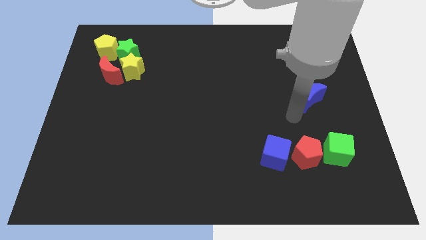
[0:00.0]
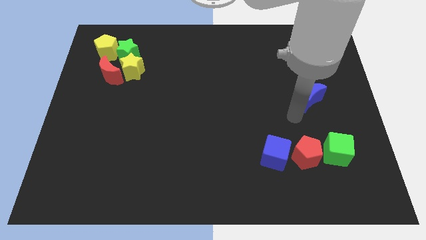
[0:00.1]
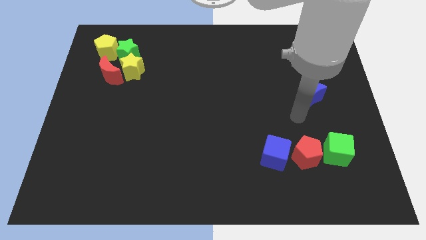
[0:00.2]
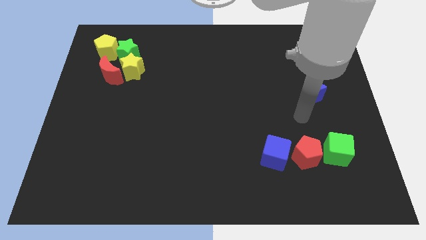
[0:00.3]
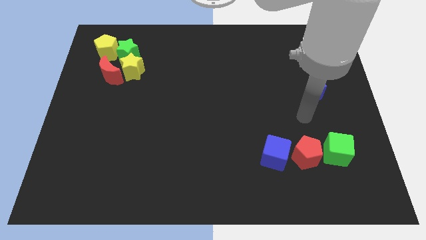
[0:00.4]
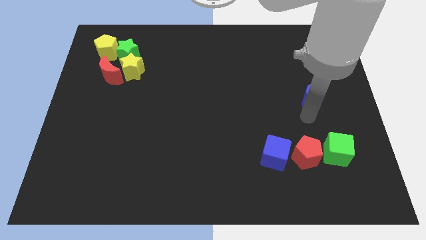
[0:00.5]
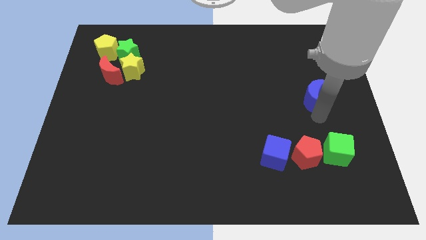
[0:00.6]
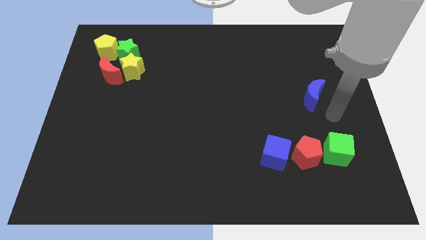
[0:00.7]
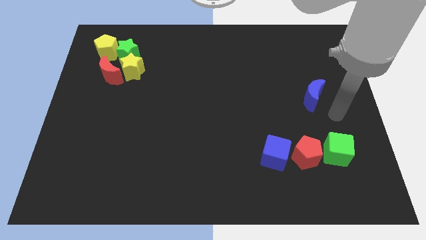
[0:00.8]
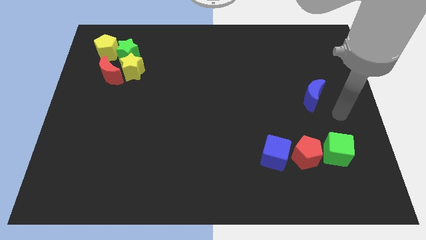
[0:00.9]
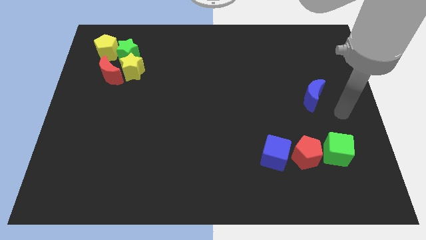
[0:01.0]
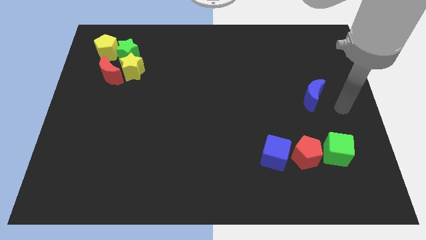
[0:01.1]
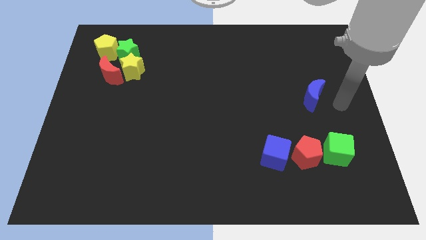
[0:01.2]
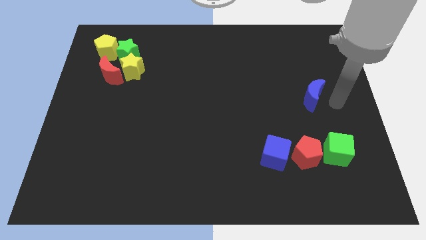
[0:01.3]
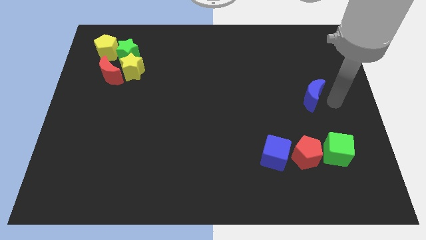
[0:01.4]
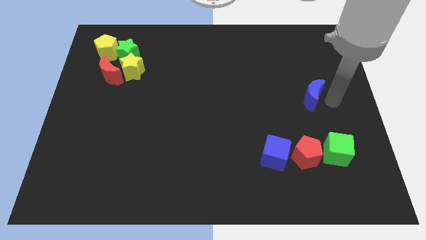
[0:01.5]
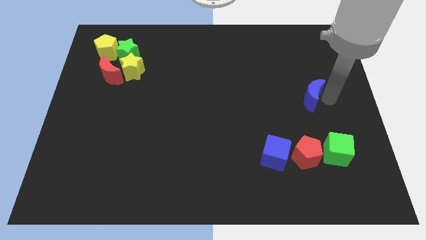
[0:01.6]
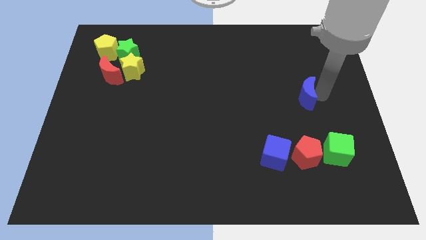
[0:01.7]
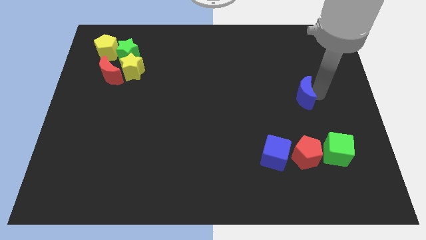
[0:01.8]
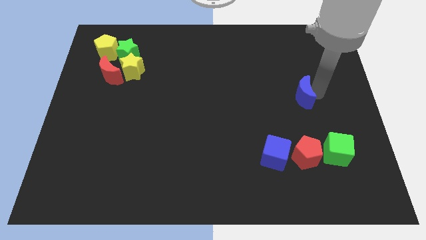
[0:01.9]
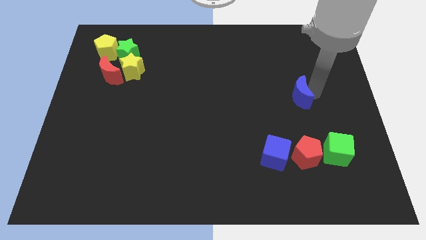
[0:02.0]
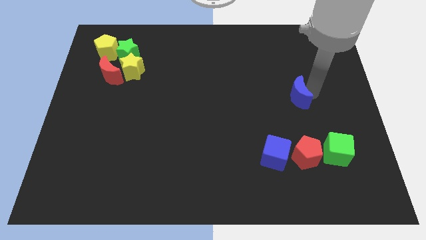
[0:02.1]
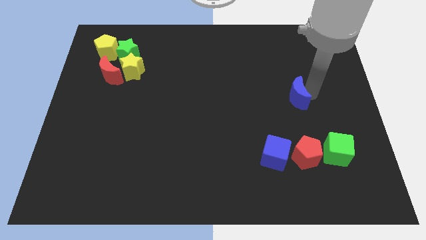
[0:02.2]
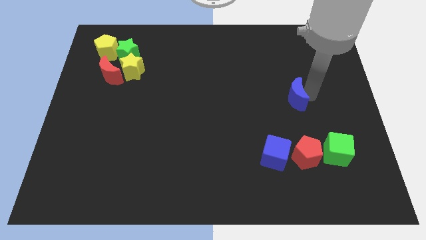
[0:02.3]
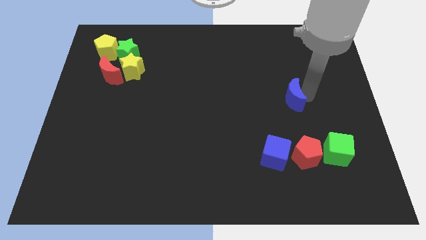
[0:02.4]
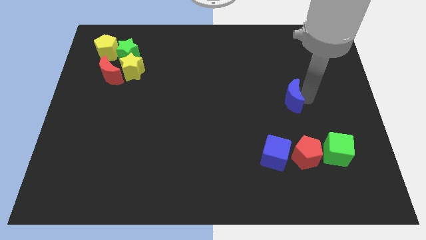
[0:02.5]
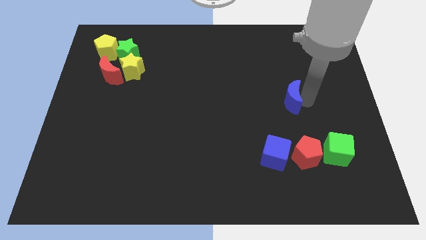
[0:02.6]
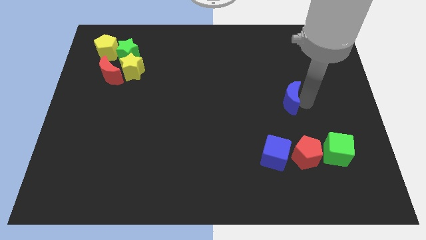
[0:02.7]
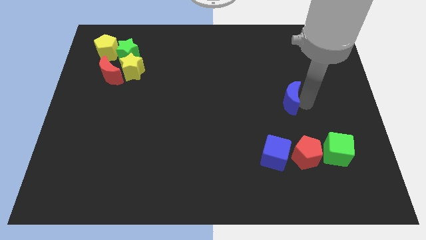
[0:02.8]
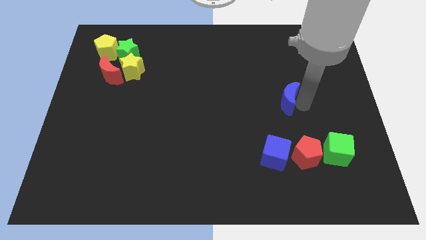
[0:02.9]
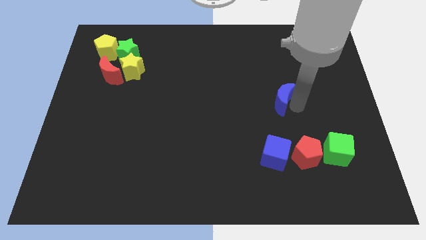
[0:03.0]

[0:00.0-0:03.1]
place the blue moon above the blue cube

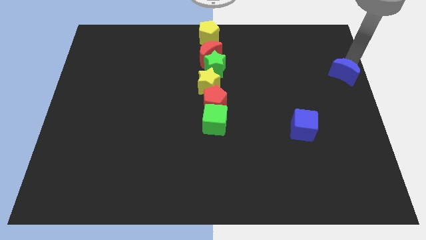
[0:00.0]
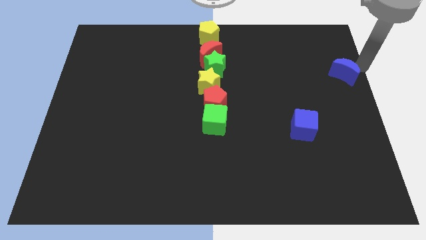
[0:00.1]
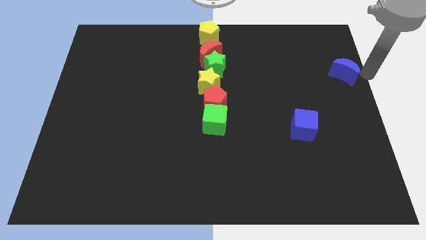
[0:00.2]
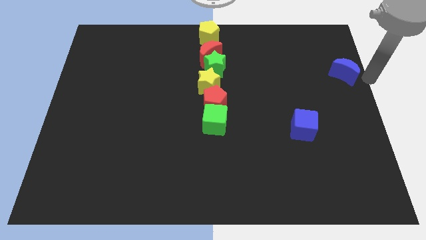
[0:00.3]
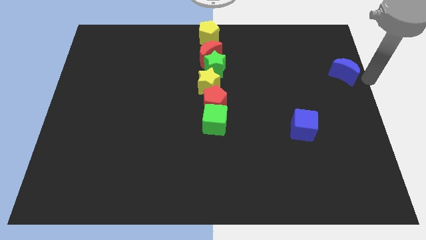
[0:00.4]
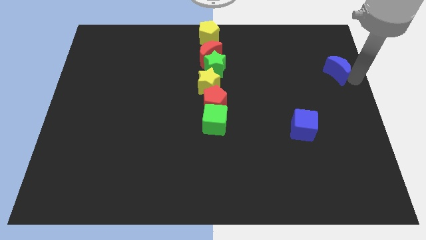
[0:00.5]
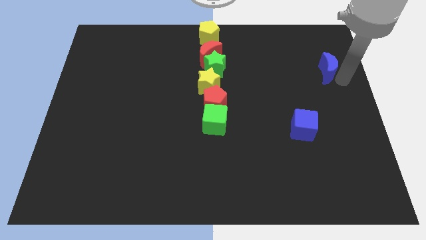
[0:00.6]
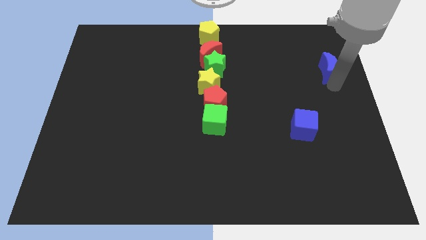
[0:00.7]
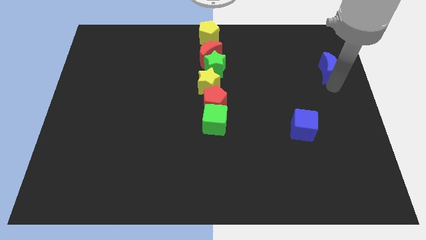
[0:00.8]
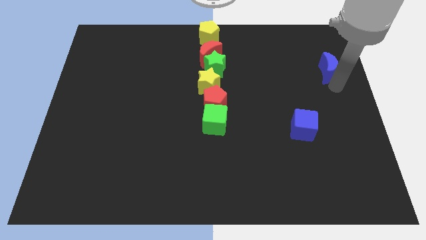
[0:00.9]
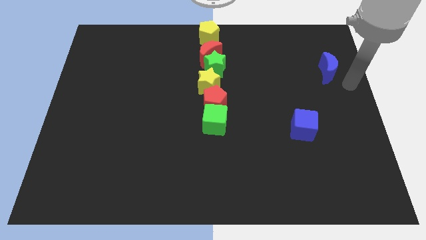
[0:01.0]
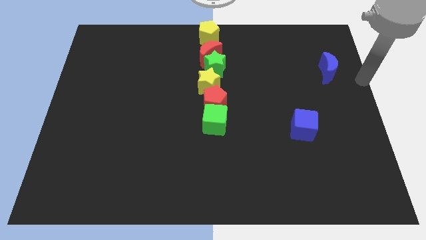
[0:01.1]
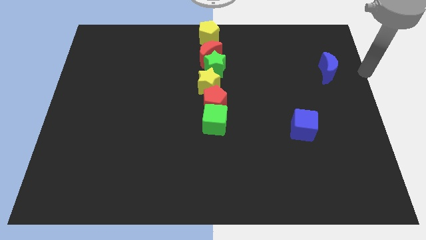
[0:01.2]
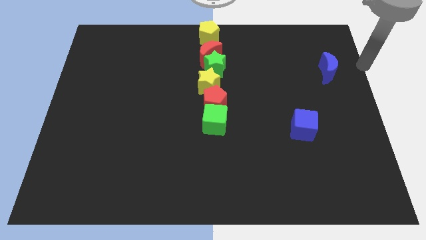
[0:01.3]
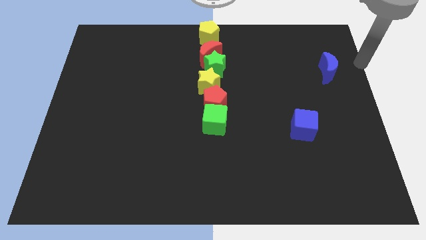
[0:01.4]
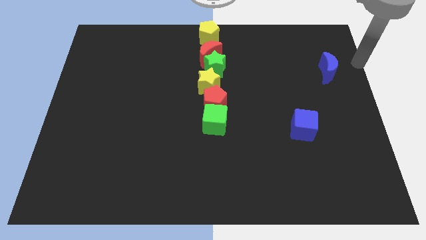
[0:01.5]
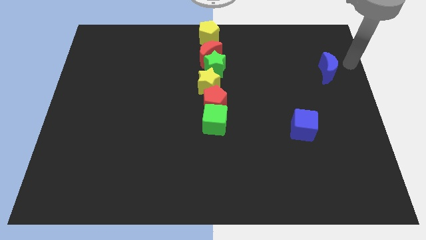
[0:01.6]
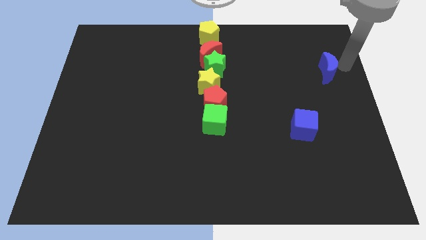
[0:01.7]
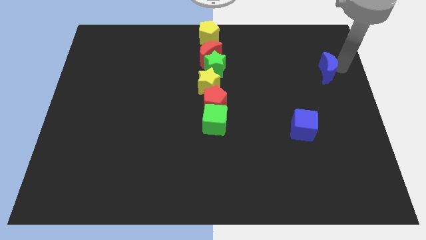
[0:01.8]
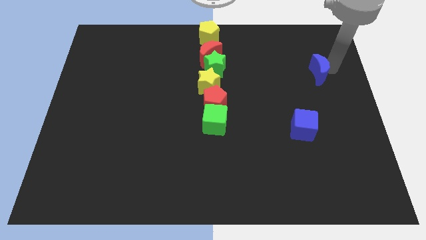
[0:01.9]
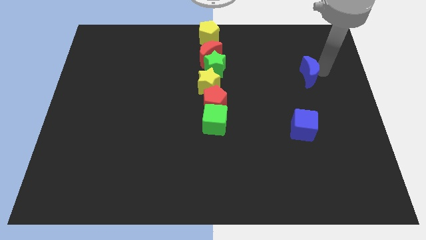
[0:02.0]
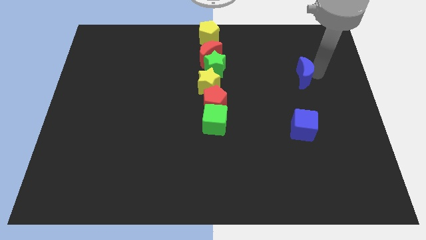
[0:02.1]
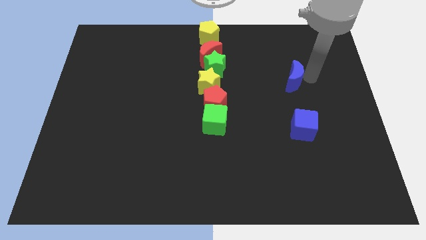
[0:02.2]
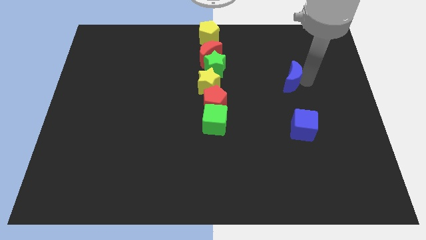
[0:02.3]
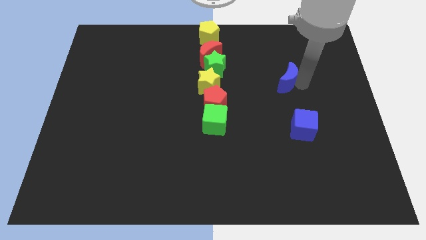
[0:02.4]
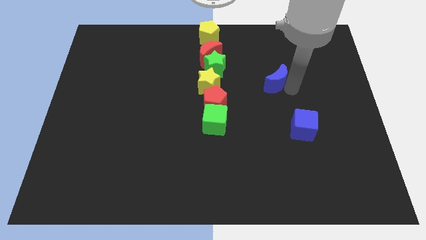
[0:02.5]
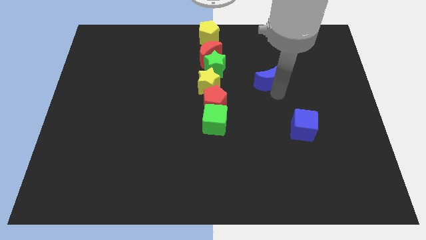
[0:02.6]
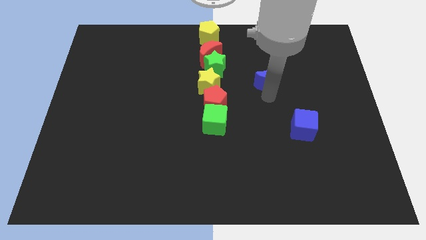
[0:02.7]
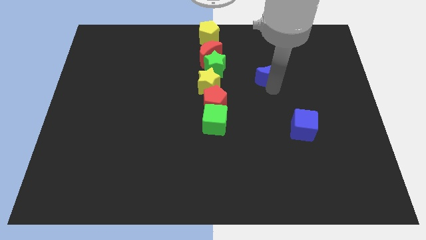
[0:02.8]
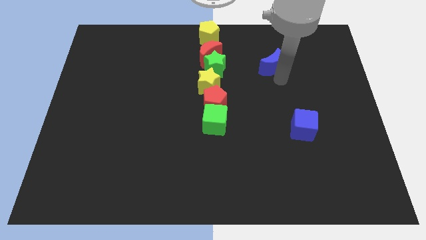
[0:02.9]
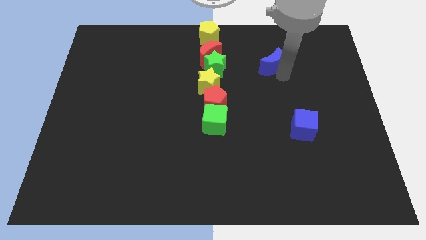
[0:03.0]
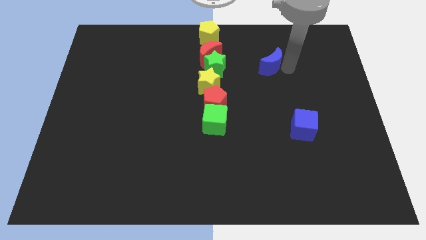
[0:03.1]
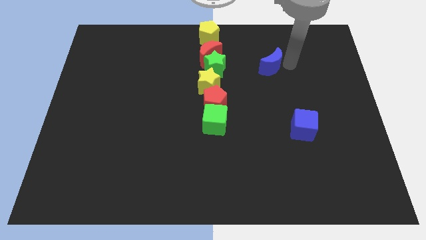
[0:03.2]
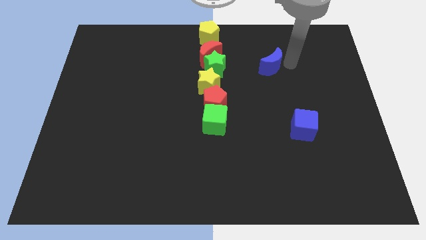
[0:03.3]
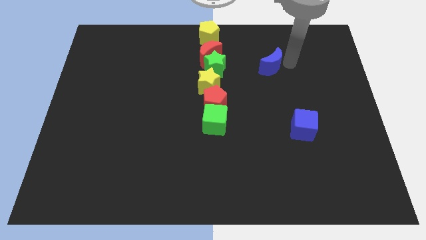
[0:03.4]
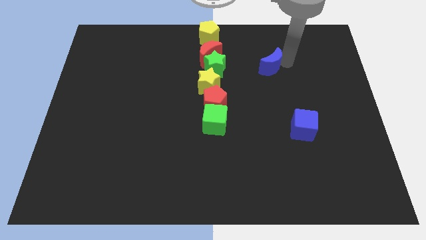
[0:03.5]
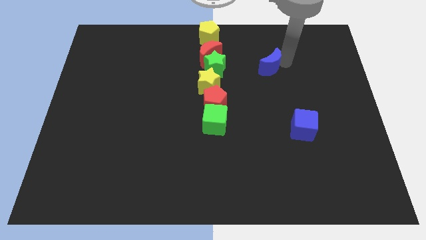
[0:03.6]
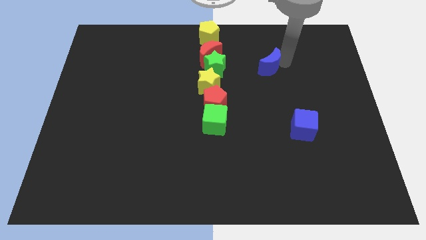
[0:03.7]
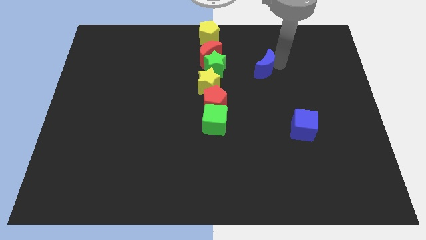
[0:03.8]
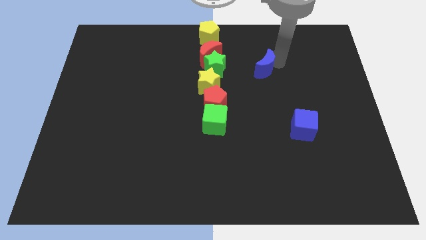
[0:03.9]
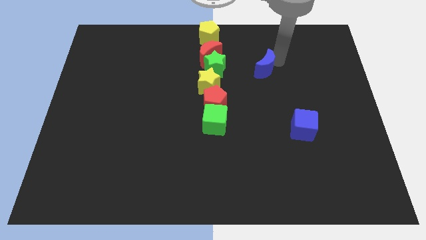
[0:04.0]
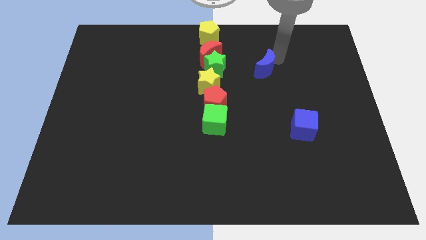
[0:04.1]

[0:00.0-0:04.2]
place the blue moon right to the green star

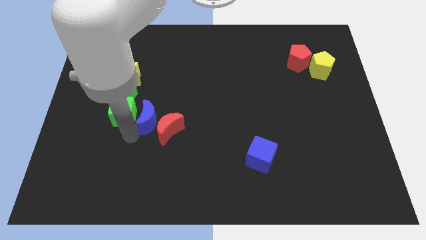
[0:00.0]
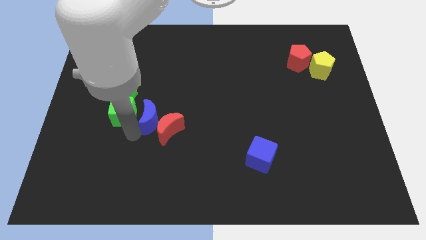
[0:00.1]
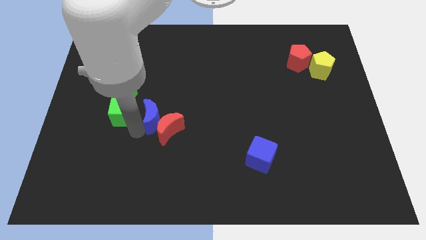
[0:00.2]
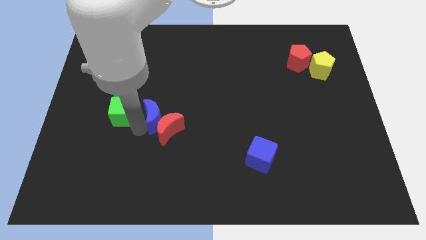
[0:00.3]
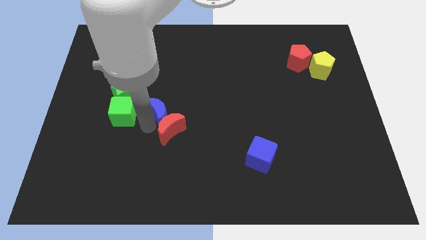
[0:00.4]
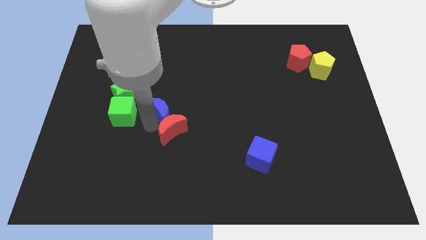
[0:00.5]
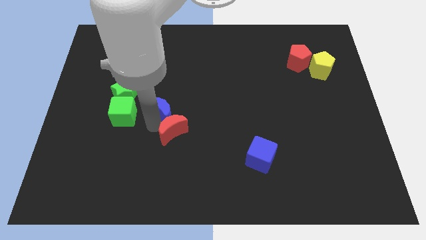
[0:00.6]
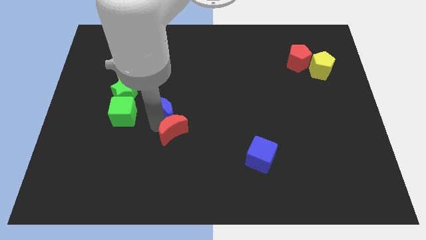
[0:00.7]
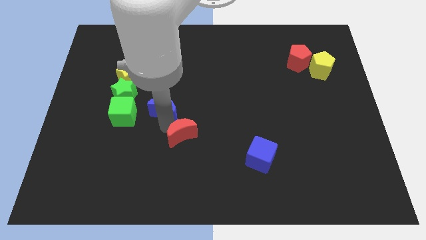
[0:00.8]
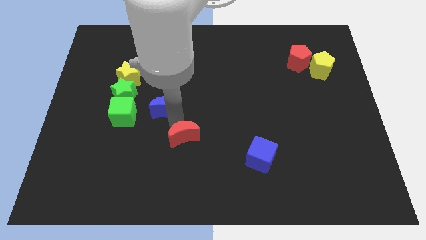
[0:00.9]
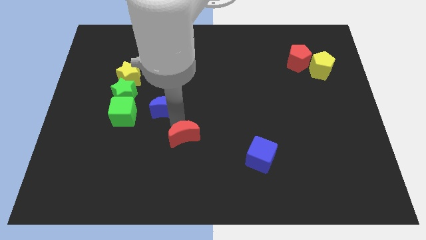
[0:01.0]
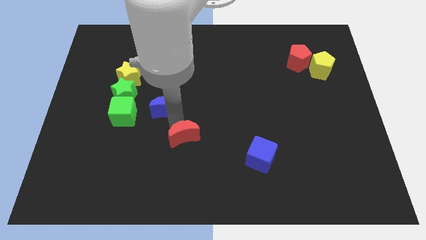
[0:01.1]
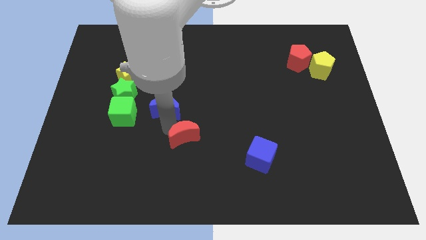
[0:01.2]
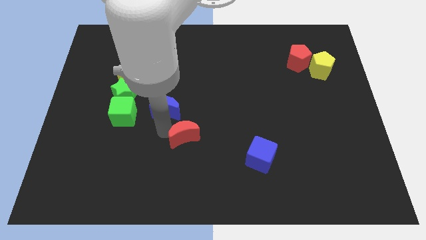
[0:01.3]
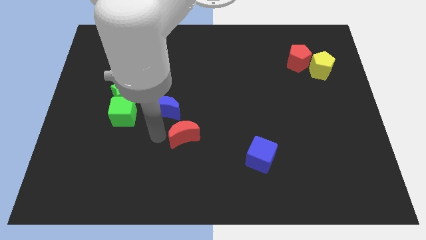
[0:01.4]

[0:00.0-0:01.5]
separate the red crescent with the blue crescent

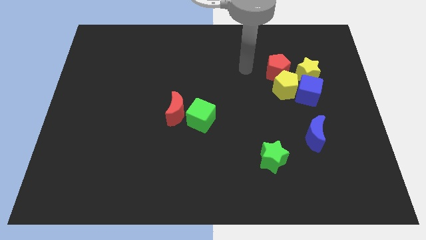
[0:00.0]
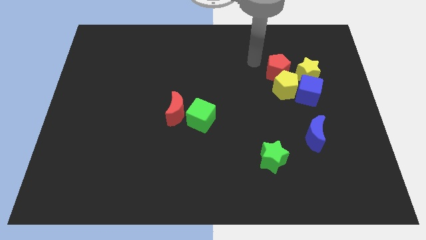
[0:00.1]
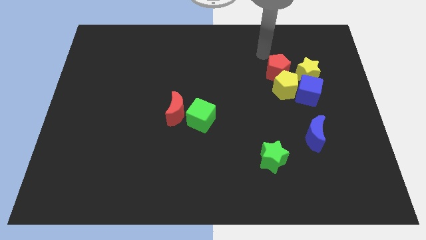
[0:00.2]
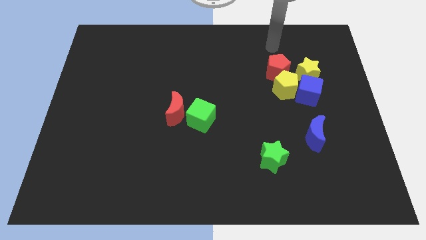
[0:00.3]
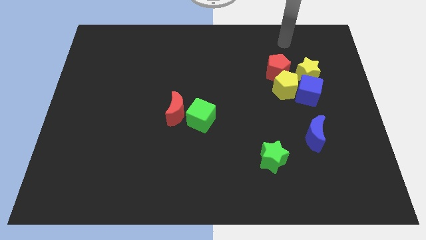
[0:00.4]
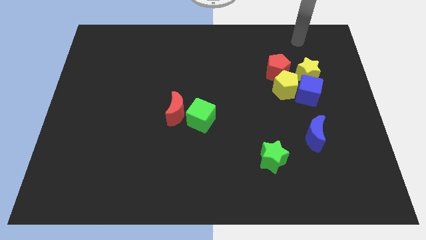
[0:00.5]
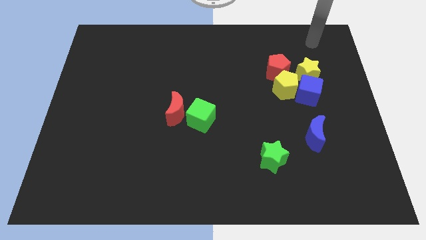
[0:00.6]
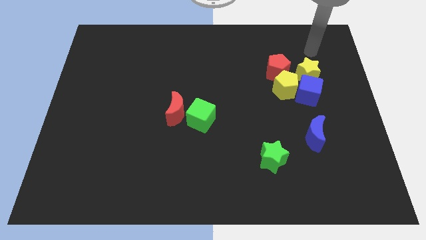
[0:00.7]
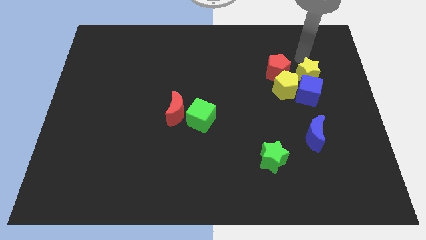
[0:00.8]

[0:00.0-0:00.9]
place the arm above the yellow star
